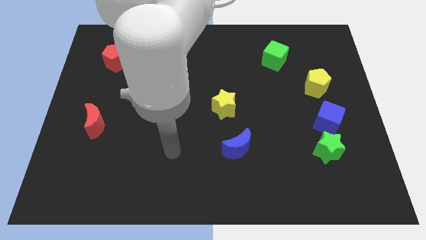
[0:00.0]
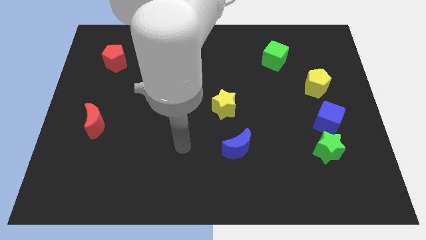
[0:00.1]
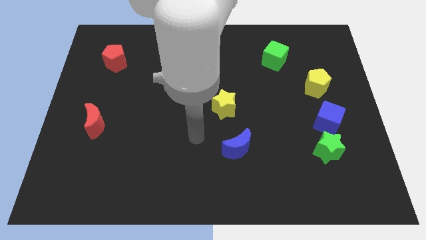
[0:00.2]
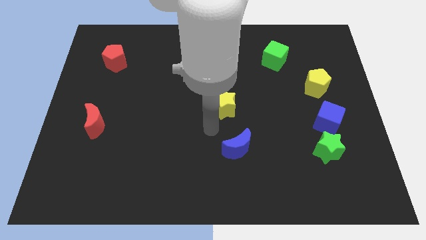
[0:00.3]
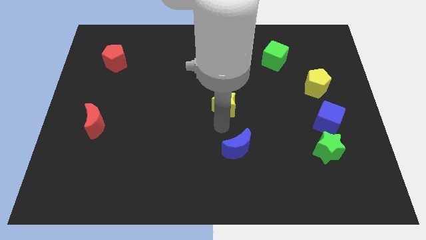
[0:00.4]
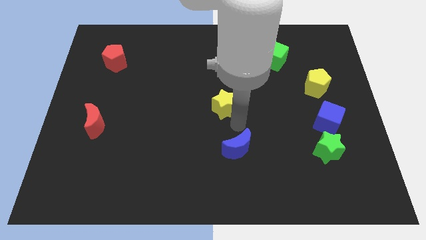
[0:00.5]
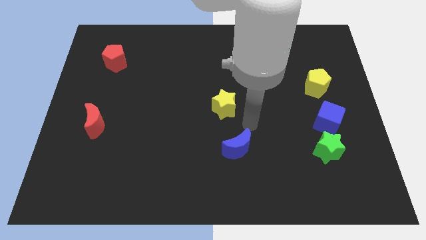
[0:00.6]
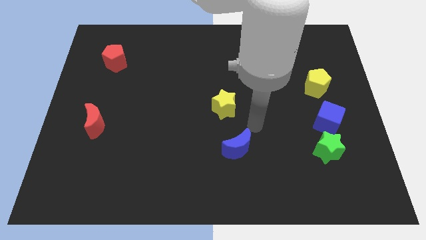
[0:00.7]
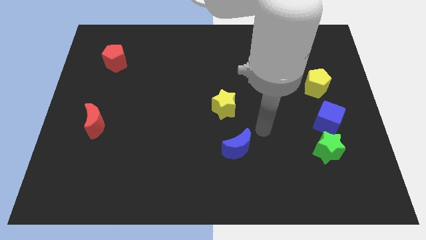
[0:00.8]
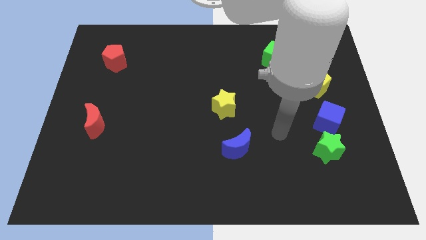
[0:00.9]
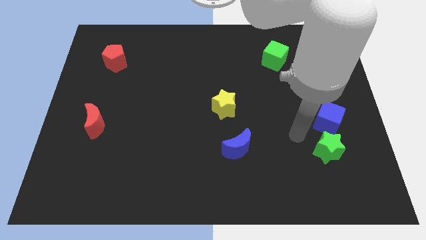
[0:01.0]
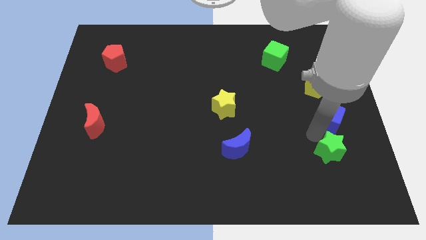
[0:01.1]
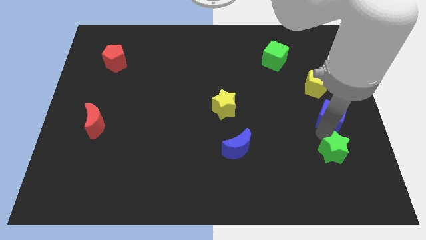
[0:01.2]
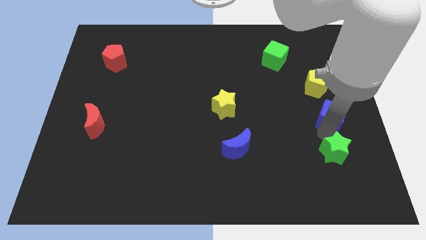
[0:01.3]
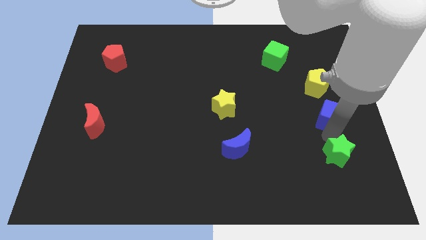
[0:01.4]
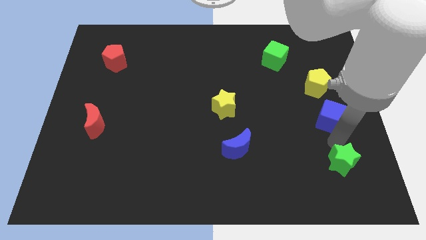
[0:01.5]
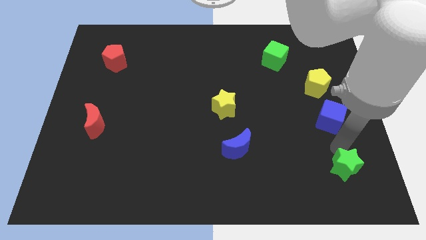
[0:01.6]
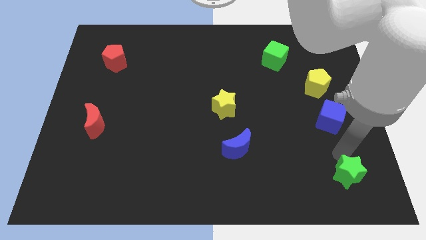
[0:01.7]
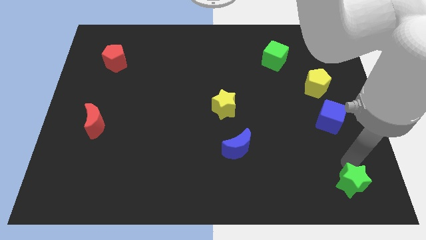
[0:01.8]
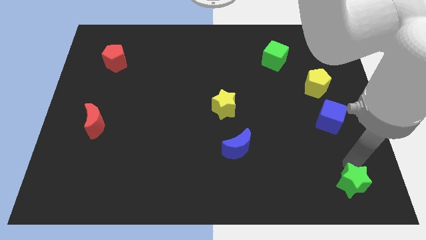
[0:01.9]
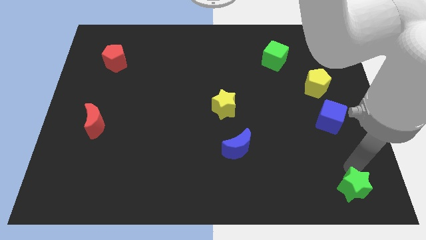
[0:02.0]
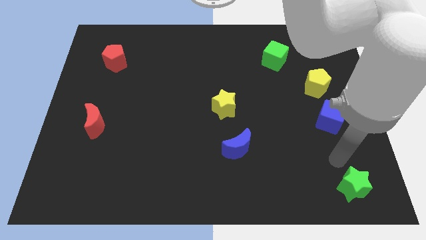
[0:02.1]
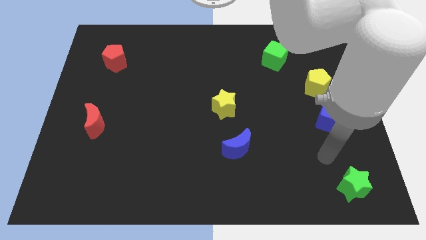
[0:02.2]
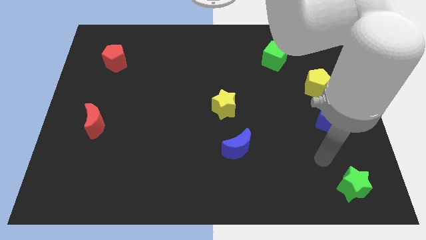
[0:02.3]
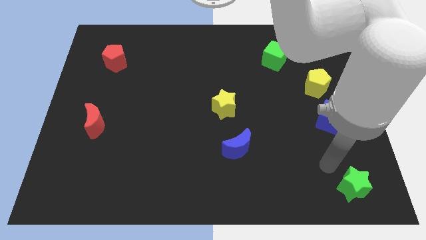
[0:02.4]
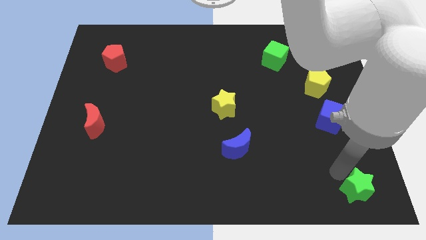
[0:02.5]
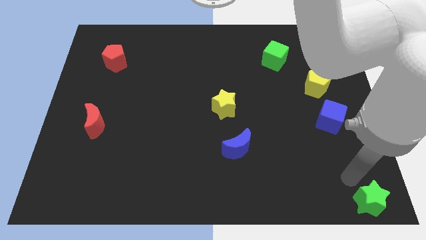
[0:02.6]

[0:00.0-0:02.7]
push the green star to the bottom of the board

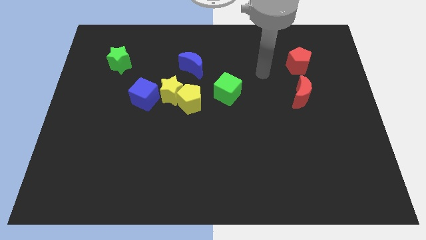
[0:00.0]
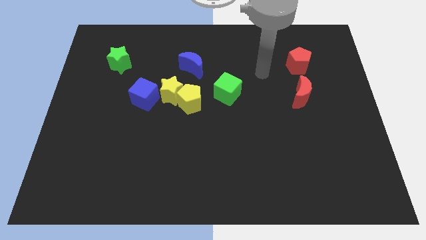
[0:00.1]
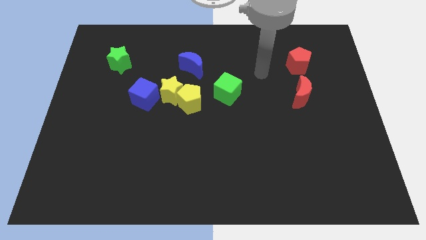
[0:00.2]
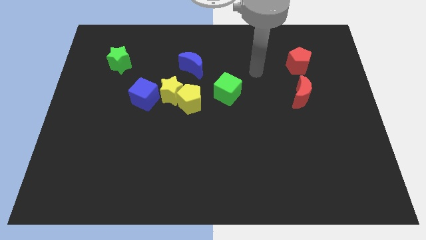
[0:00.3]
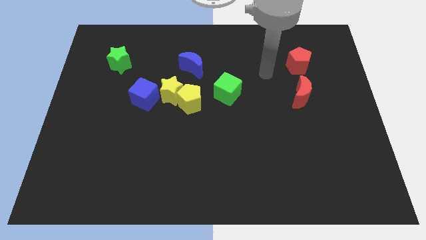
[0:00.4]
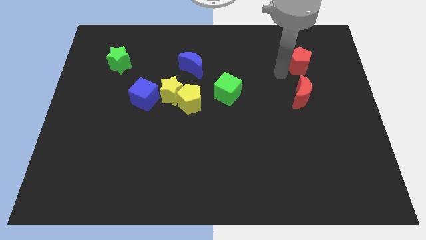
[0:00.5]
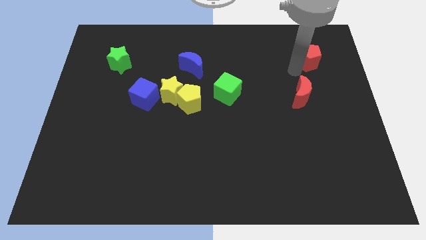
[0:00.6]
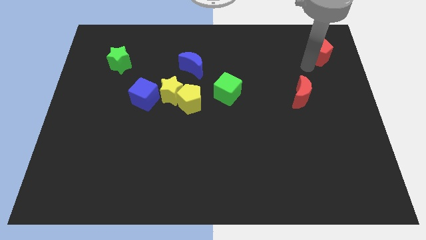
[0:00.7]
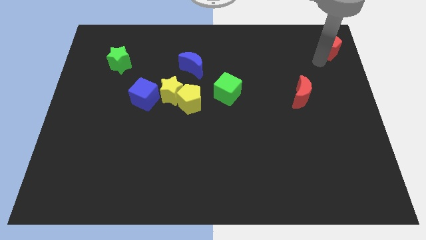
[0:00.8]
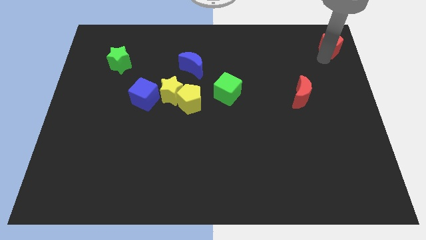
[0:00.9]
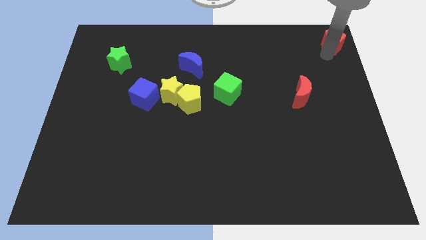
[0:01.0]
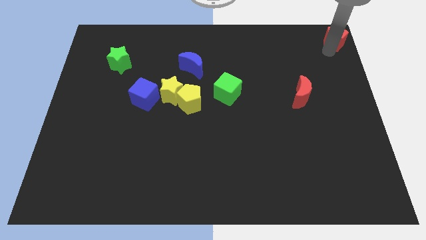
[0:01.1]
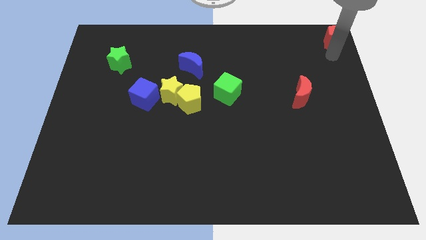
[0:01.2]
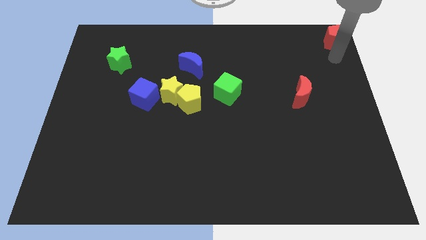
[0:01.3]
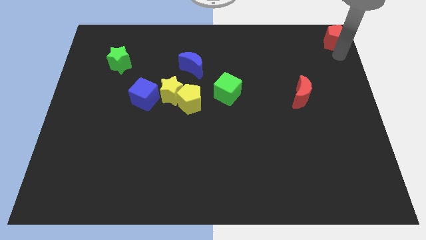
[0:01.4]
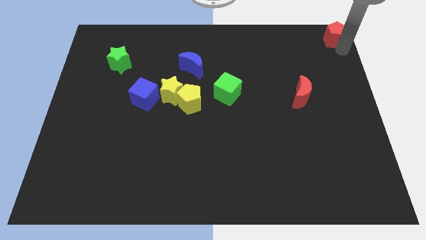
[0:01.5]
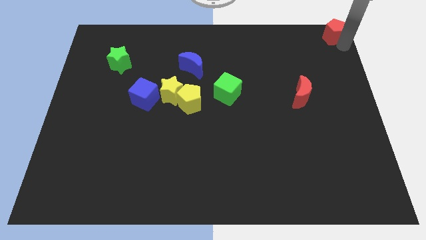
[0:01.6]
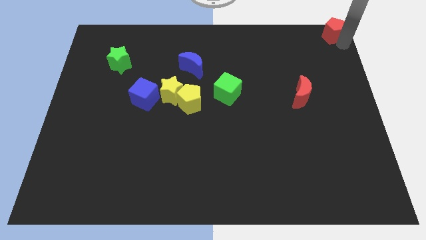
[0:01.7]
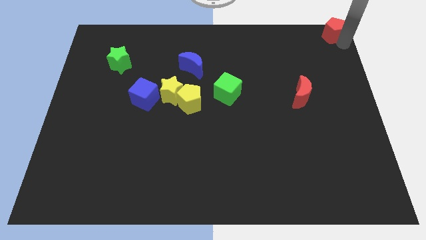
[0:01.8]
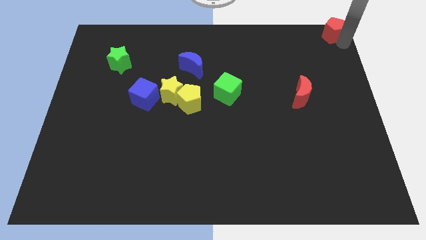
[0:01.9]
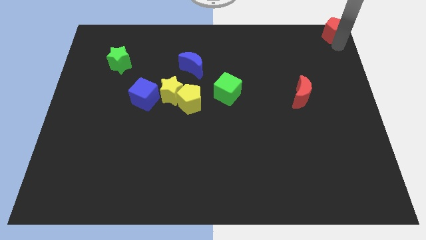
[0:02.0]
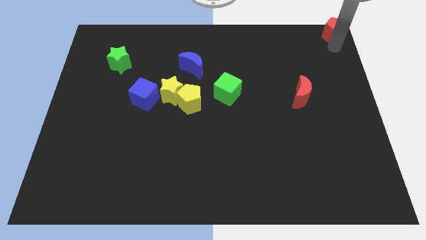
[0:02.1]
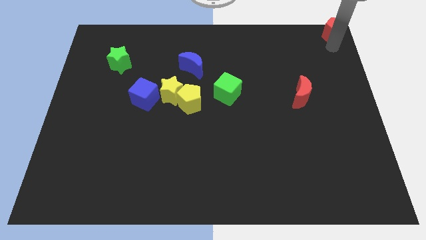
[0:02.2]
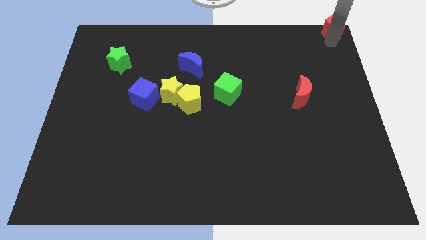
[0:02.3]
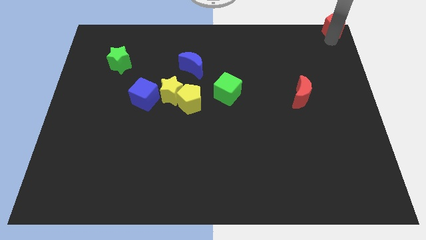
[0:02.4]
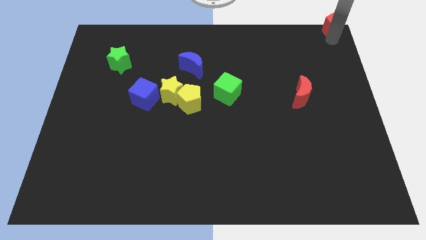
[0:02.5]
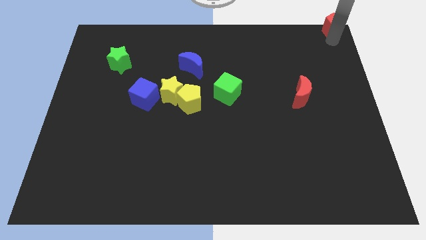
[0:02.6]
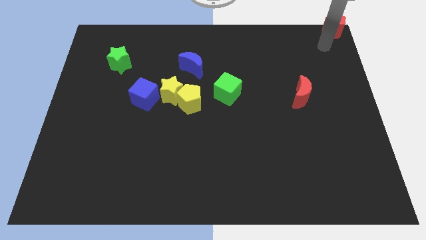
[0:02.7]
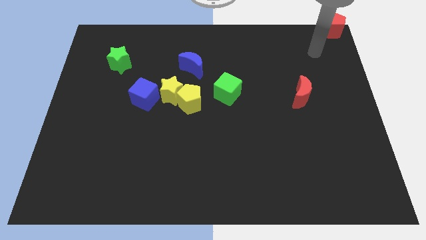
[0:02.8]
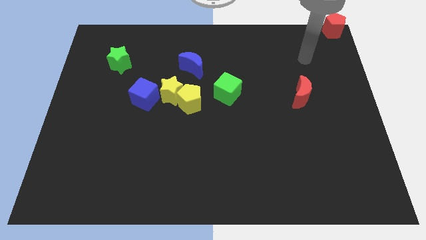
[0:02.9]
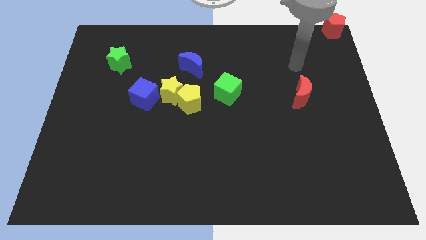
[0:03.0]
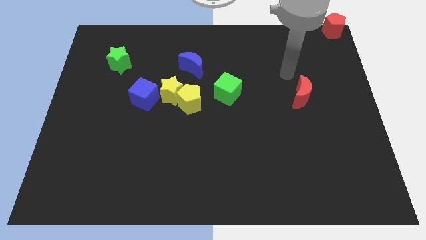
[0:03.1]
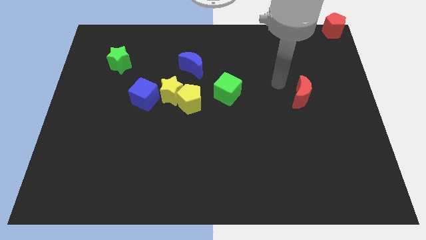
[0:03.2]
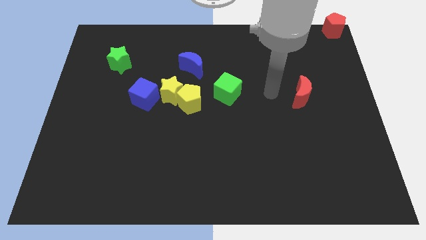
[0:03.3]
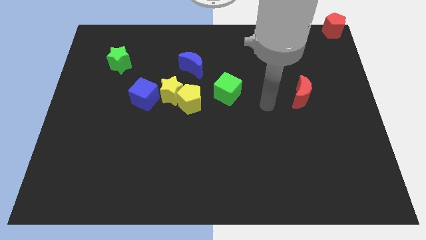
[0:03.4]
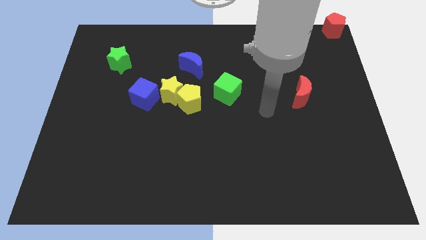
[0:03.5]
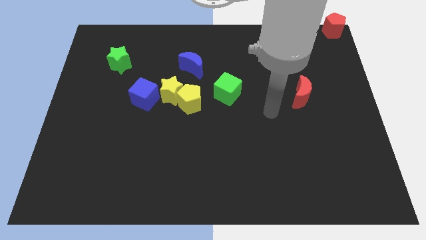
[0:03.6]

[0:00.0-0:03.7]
move the red pentagon to the top right of the board

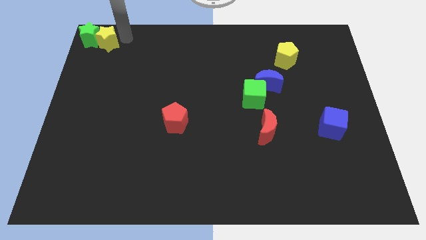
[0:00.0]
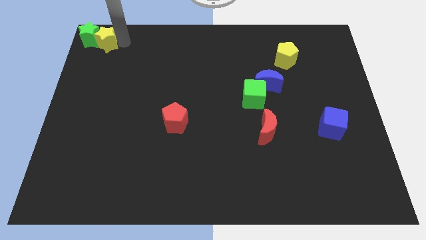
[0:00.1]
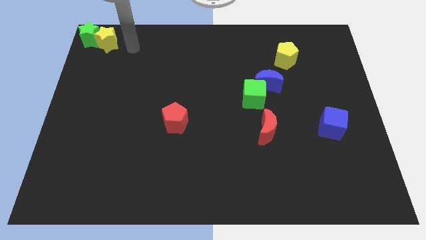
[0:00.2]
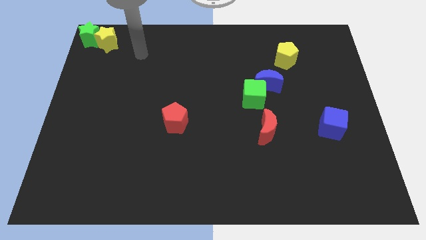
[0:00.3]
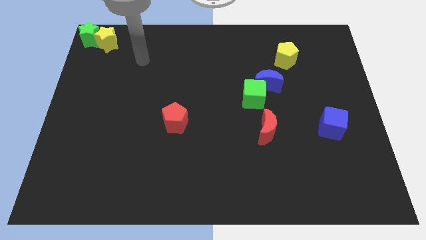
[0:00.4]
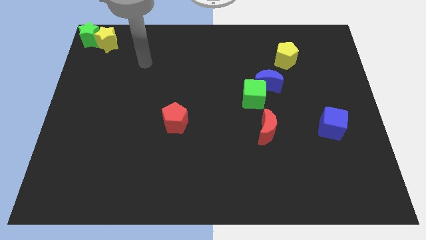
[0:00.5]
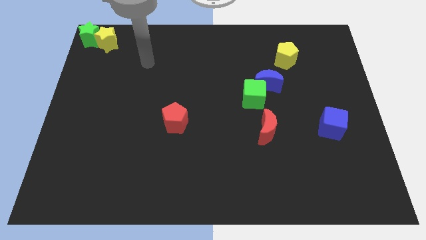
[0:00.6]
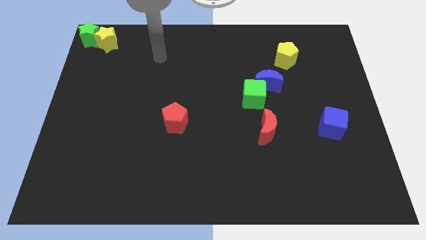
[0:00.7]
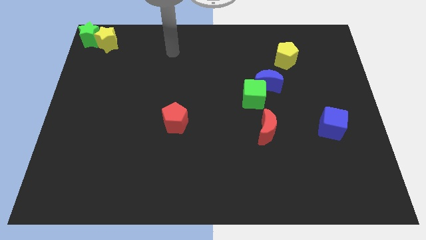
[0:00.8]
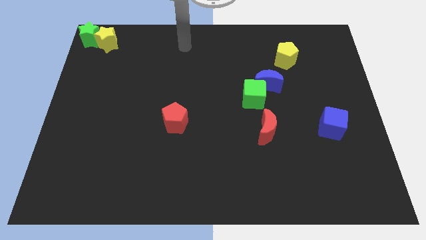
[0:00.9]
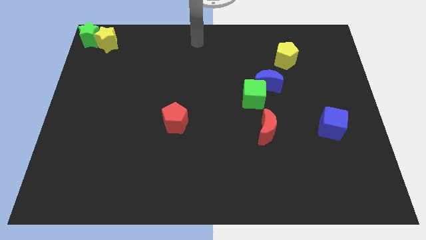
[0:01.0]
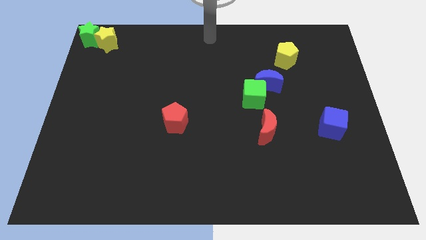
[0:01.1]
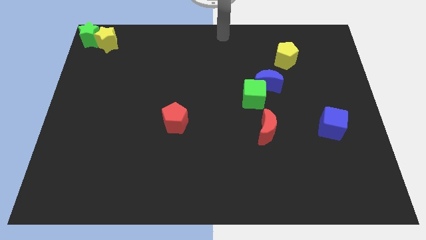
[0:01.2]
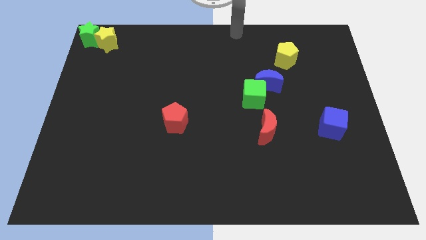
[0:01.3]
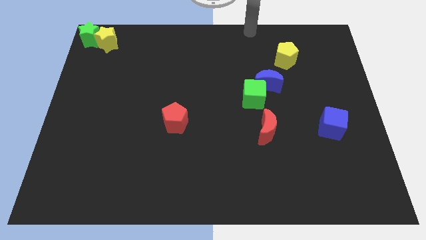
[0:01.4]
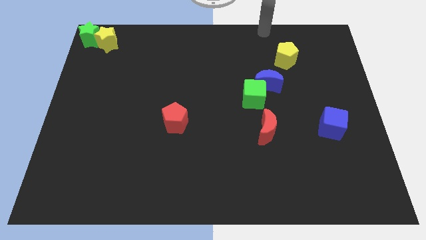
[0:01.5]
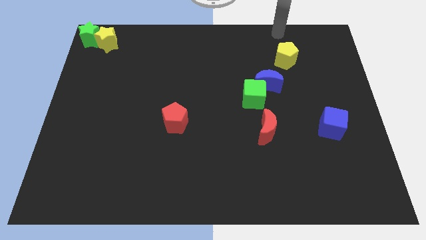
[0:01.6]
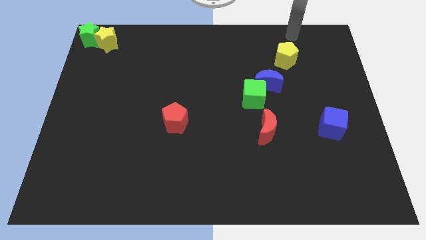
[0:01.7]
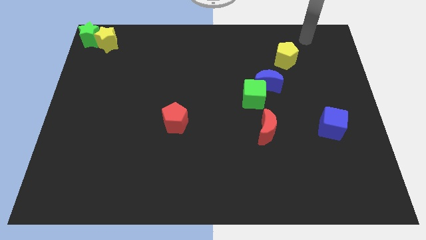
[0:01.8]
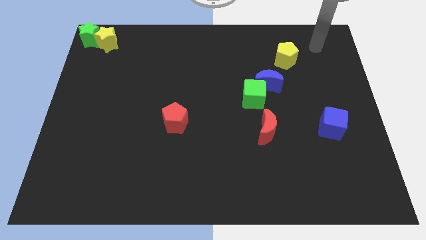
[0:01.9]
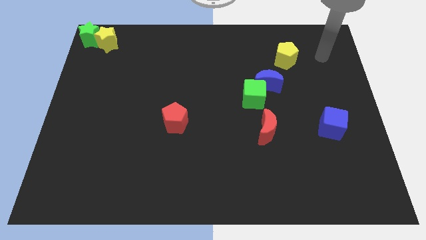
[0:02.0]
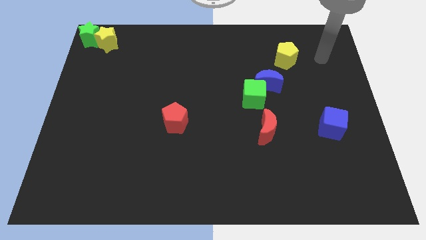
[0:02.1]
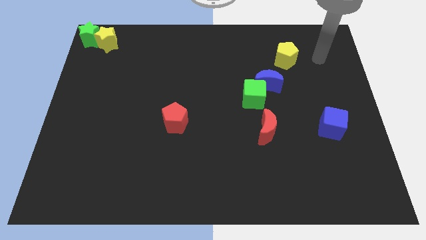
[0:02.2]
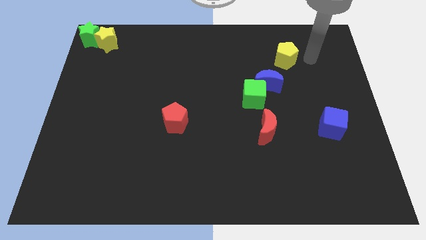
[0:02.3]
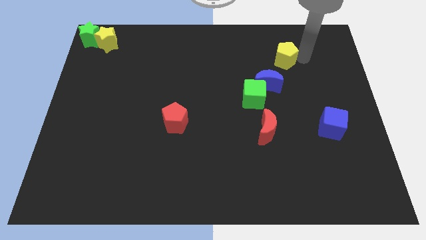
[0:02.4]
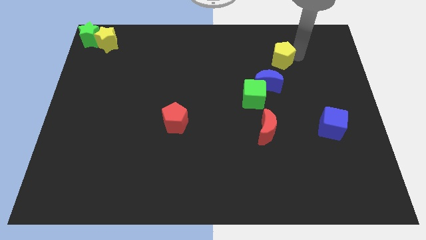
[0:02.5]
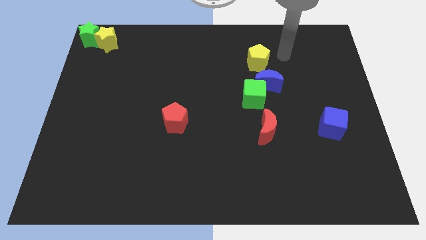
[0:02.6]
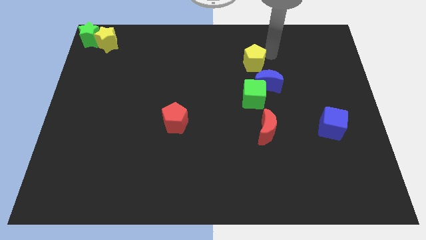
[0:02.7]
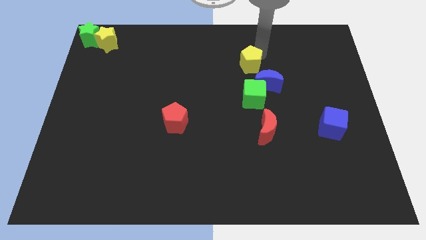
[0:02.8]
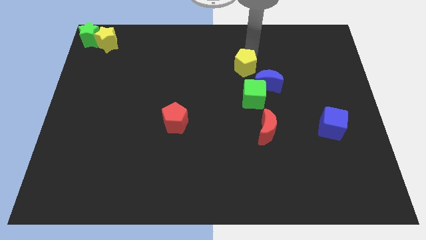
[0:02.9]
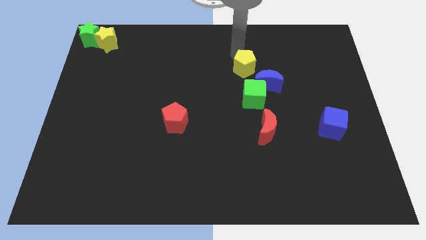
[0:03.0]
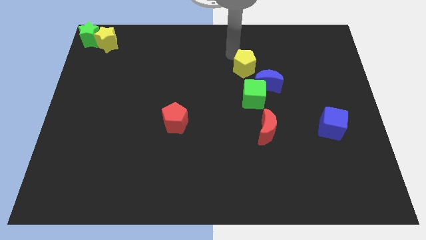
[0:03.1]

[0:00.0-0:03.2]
push yellow pentagon above green cube
